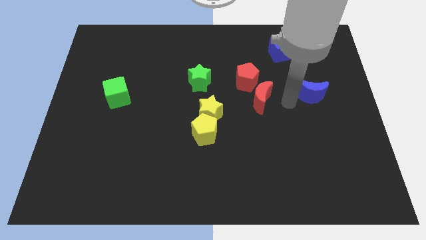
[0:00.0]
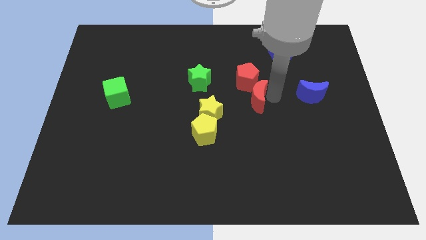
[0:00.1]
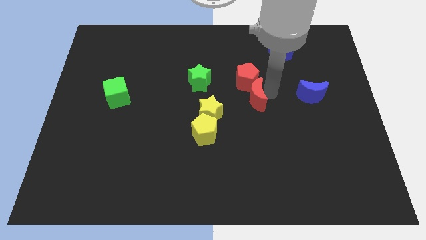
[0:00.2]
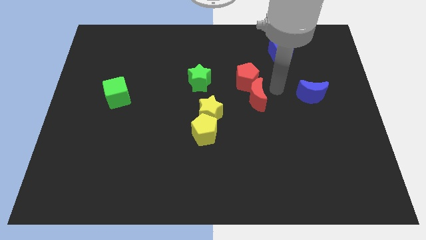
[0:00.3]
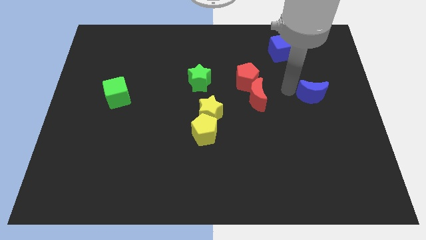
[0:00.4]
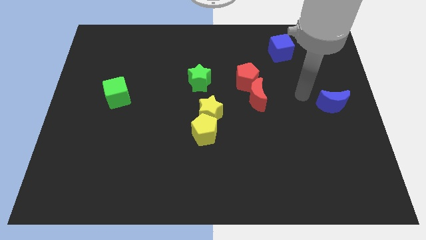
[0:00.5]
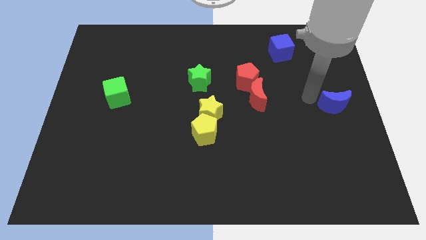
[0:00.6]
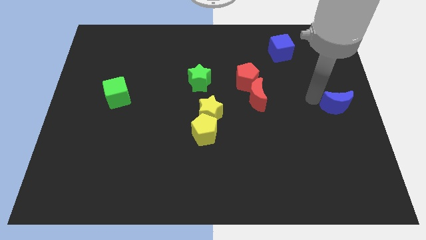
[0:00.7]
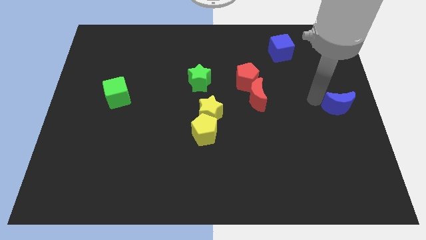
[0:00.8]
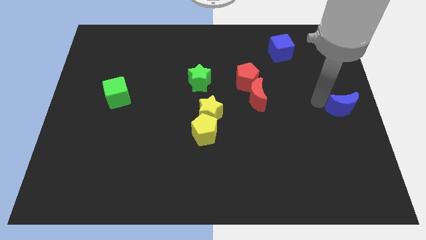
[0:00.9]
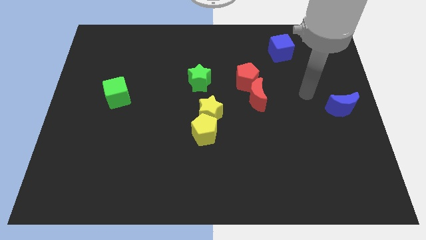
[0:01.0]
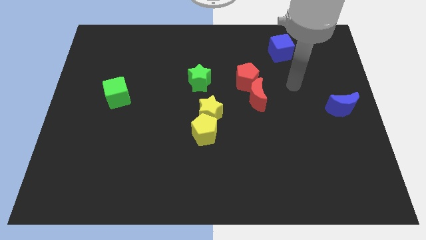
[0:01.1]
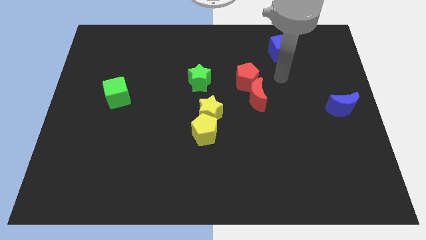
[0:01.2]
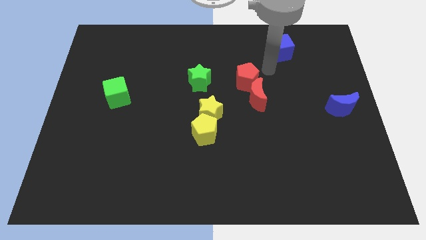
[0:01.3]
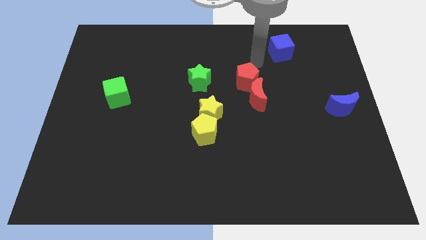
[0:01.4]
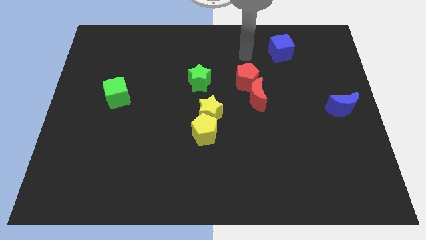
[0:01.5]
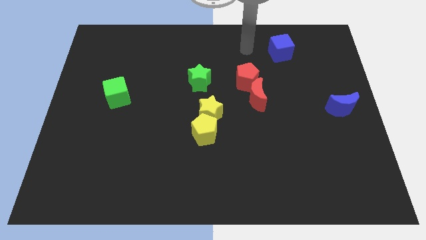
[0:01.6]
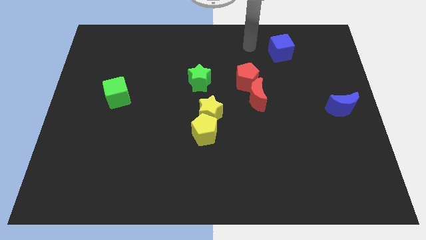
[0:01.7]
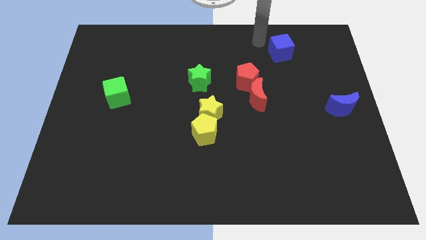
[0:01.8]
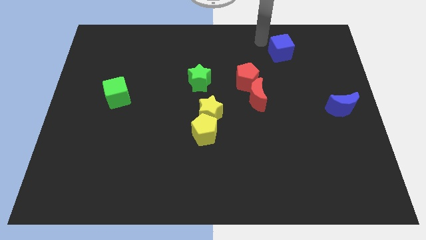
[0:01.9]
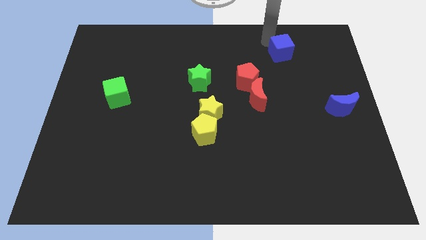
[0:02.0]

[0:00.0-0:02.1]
put the blue crescent at the right center of the board

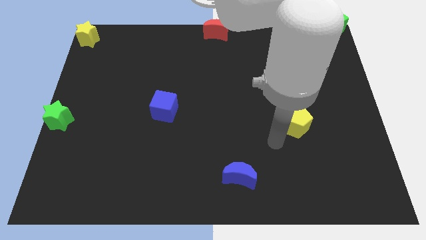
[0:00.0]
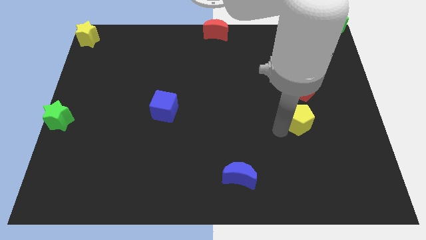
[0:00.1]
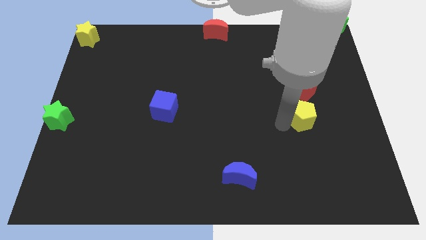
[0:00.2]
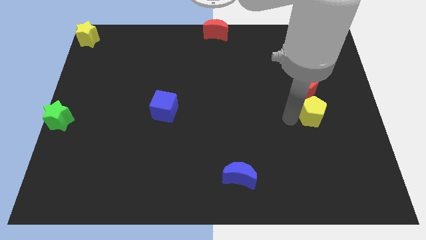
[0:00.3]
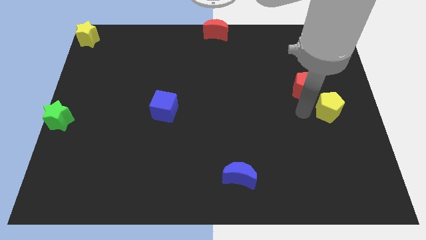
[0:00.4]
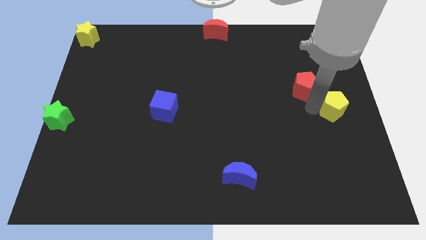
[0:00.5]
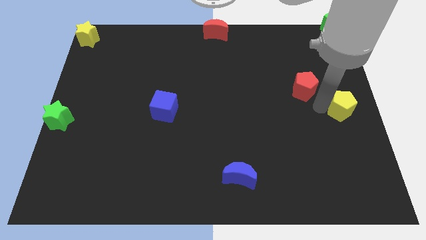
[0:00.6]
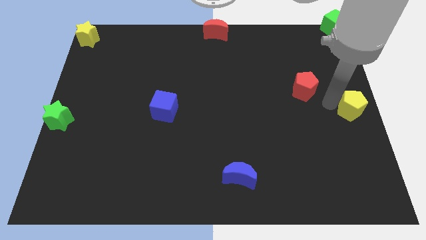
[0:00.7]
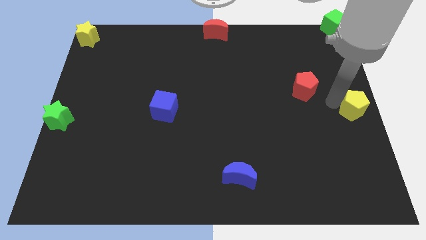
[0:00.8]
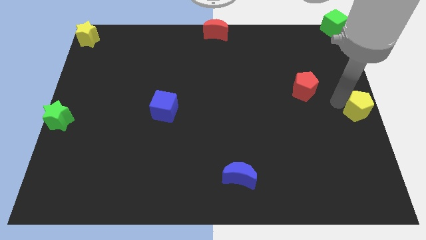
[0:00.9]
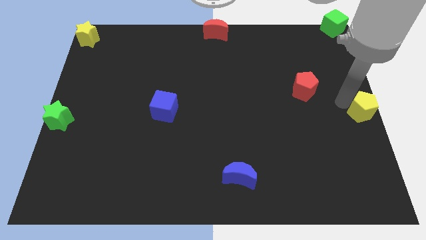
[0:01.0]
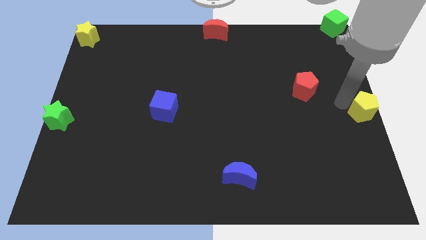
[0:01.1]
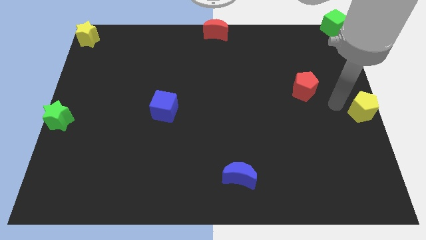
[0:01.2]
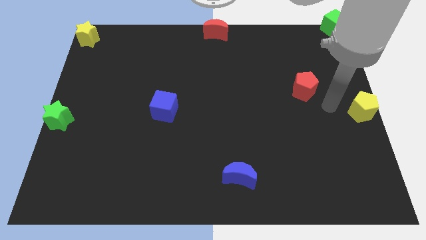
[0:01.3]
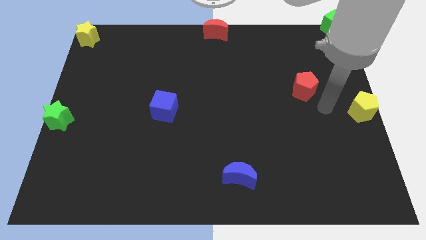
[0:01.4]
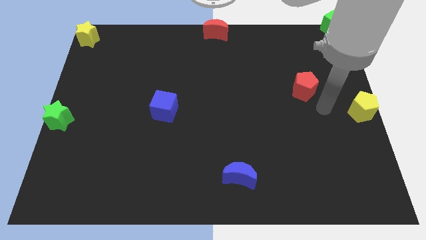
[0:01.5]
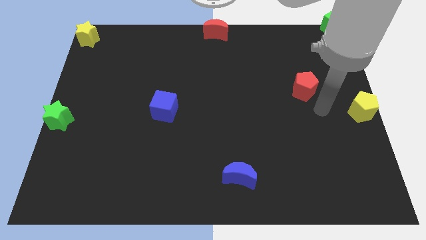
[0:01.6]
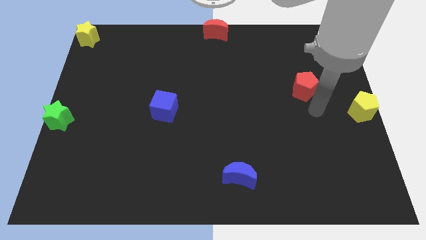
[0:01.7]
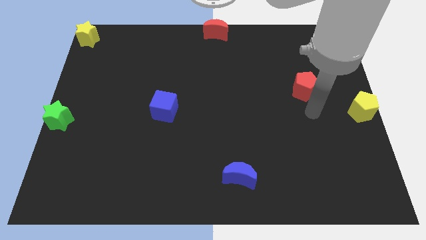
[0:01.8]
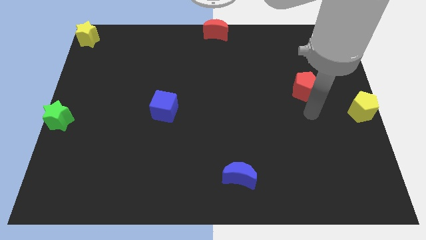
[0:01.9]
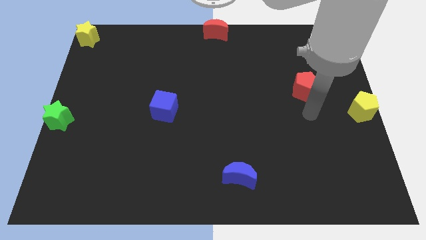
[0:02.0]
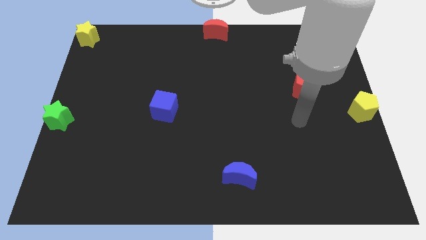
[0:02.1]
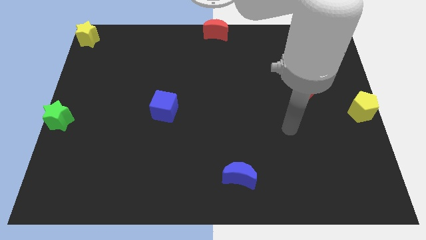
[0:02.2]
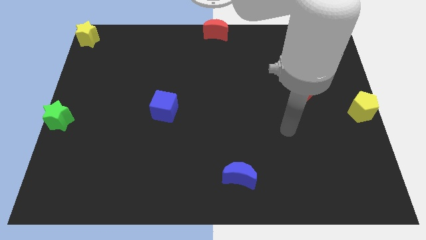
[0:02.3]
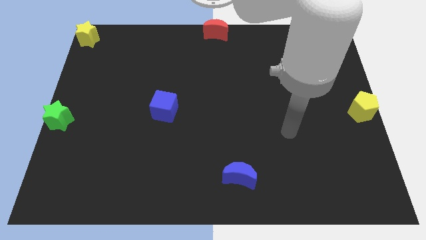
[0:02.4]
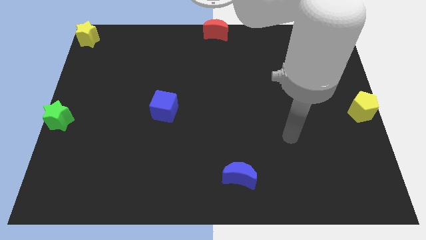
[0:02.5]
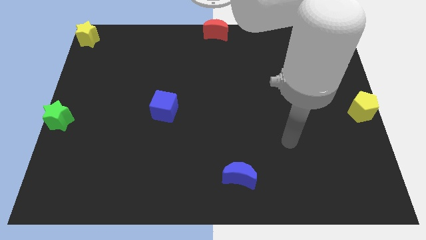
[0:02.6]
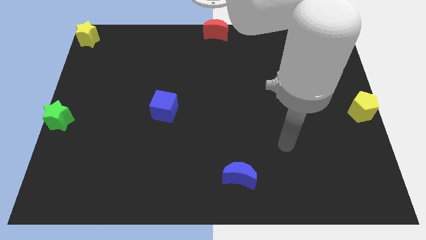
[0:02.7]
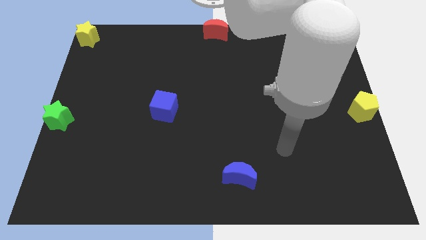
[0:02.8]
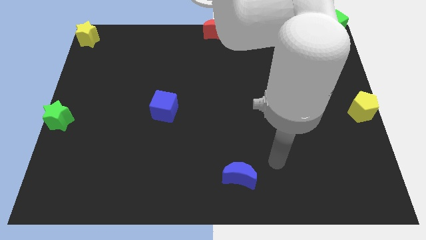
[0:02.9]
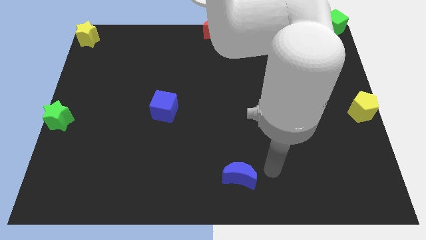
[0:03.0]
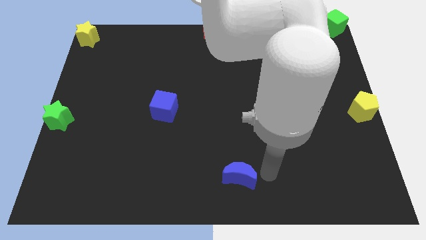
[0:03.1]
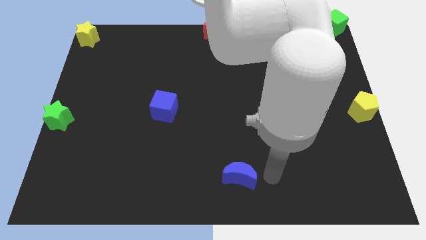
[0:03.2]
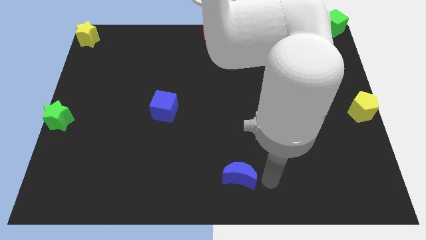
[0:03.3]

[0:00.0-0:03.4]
move the yellow pentagon to the right center of the board

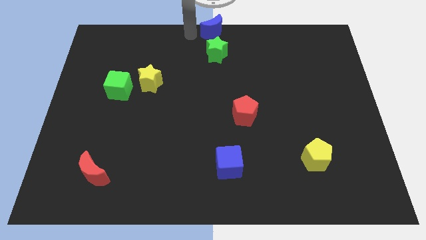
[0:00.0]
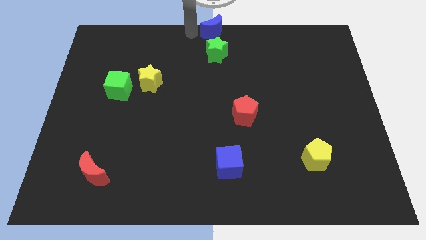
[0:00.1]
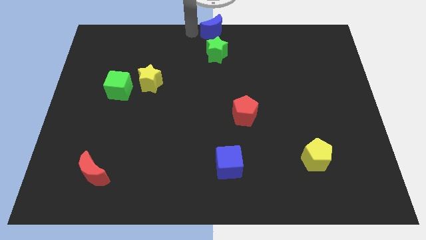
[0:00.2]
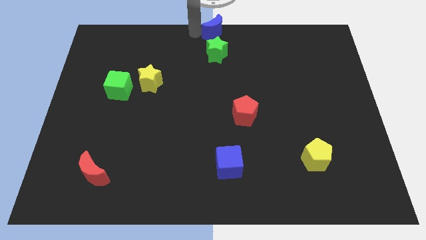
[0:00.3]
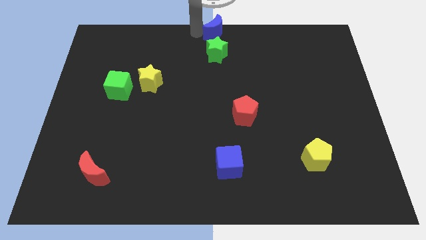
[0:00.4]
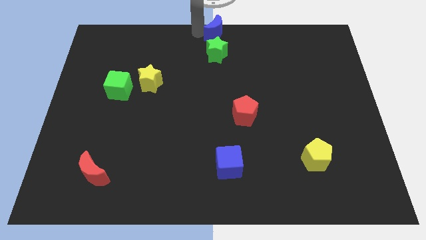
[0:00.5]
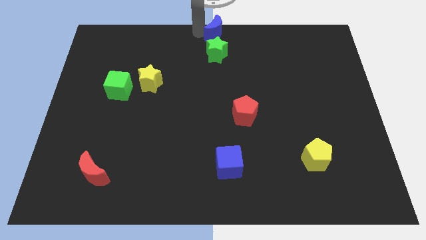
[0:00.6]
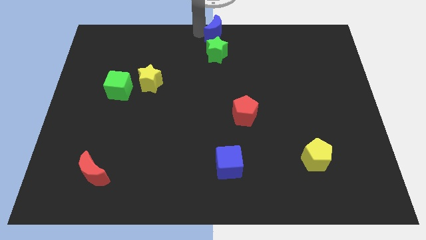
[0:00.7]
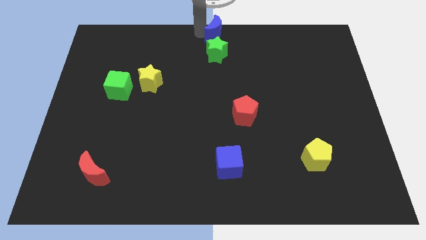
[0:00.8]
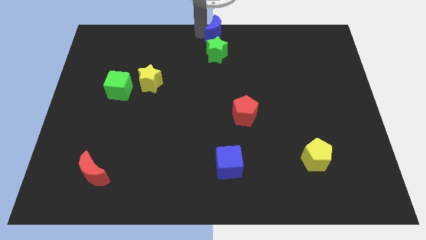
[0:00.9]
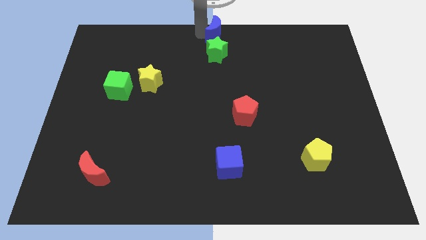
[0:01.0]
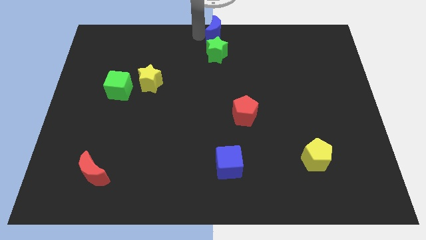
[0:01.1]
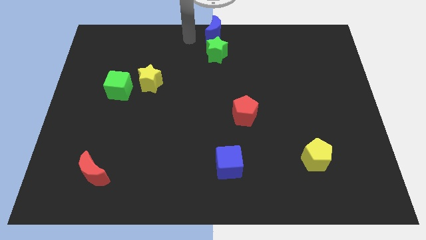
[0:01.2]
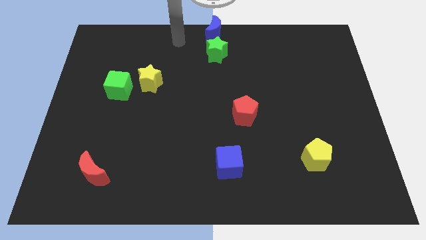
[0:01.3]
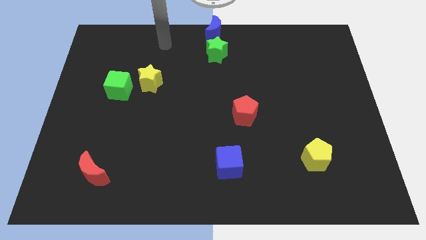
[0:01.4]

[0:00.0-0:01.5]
move the blue crescent vertical to the green star

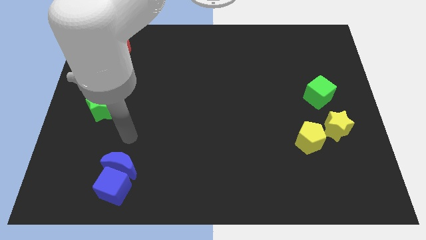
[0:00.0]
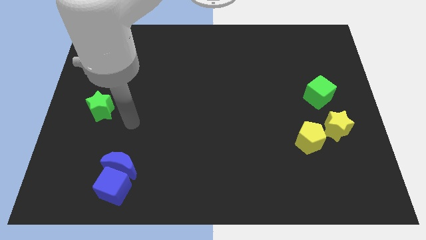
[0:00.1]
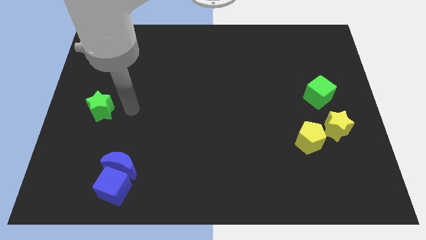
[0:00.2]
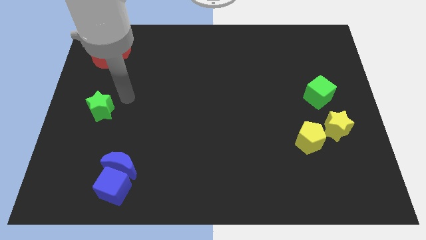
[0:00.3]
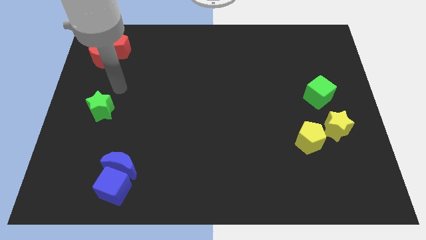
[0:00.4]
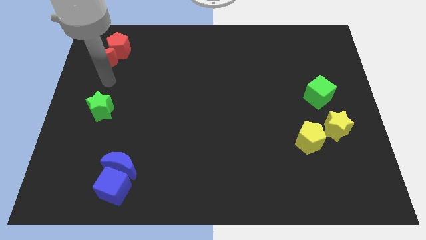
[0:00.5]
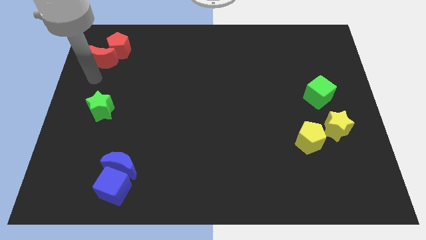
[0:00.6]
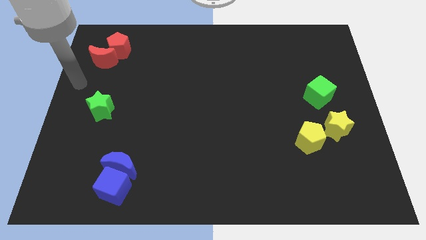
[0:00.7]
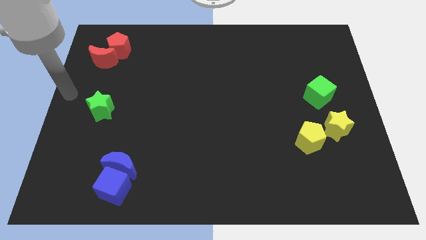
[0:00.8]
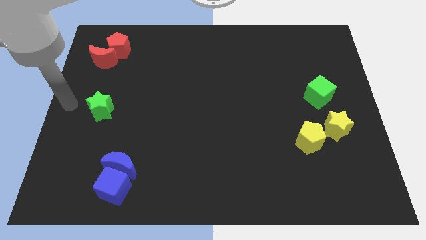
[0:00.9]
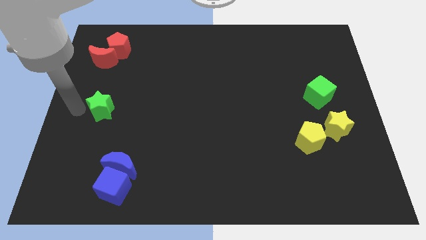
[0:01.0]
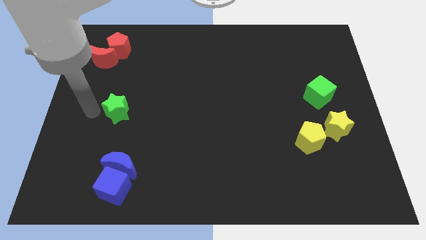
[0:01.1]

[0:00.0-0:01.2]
tap the green star

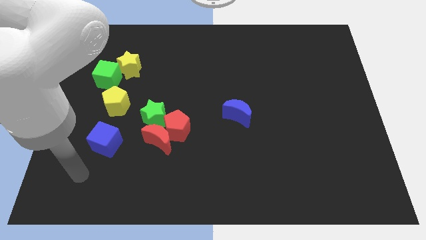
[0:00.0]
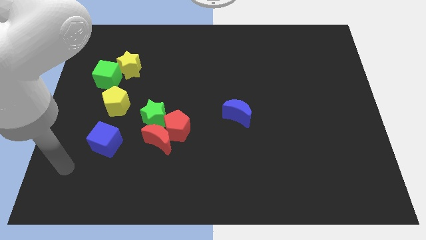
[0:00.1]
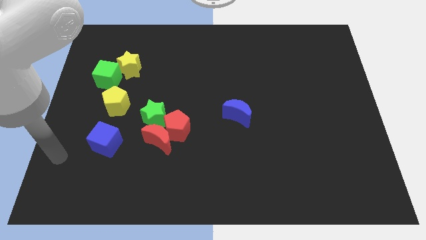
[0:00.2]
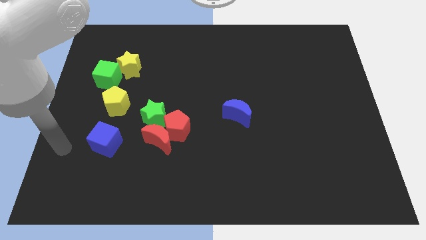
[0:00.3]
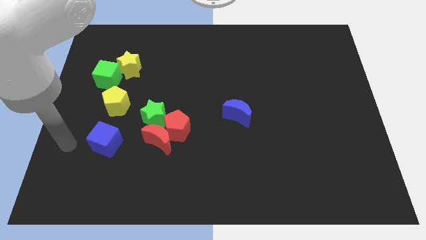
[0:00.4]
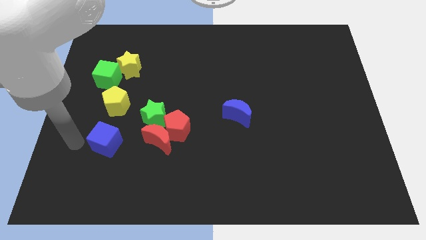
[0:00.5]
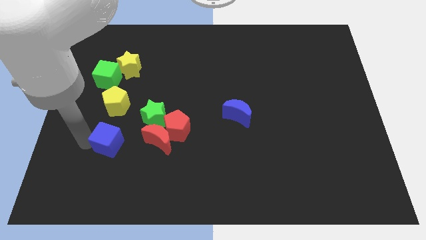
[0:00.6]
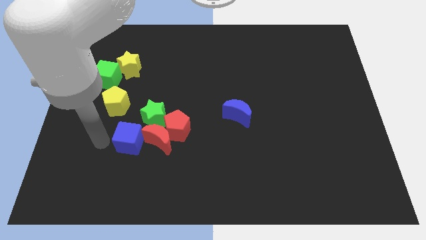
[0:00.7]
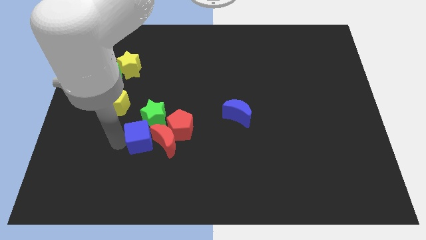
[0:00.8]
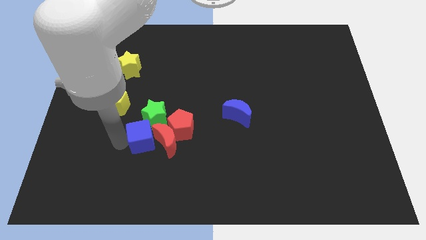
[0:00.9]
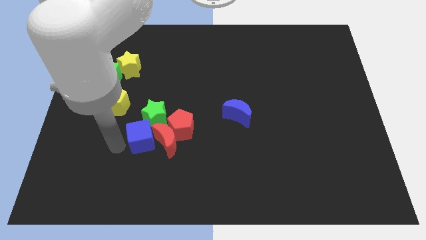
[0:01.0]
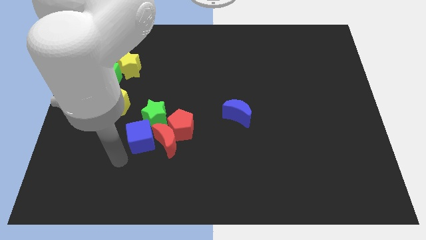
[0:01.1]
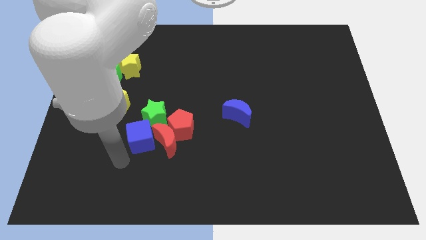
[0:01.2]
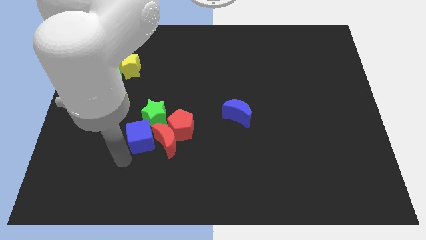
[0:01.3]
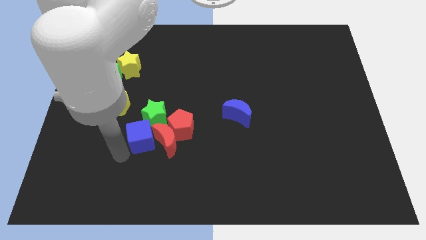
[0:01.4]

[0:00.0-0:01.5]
drag the blue cube into the red moon
